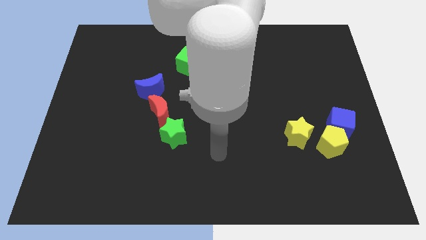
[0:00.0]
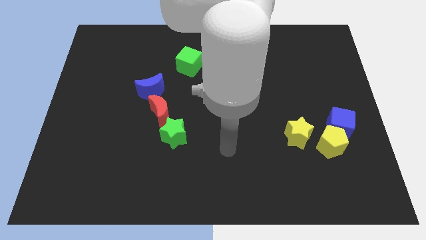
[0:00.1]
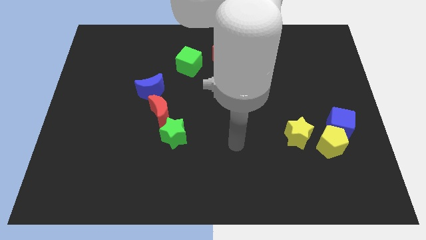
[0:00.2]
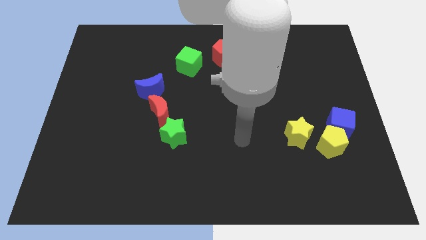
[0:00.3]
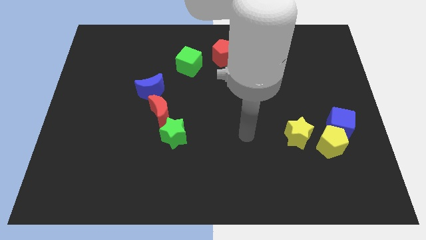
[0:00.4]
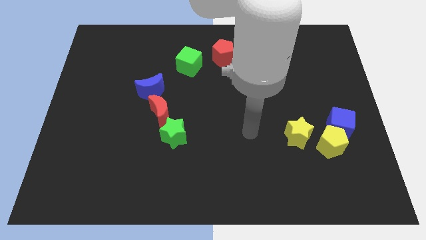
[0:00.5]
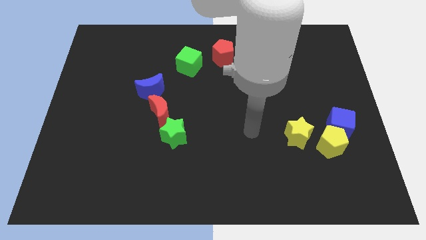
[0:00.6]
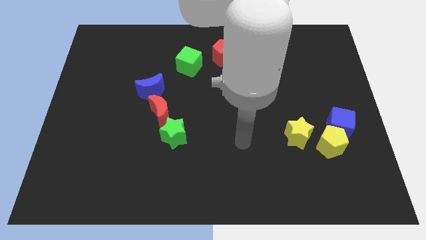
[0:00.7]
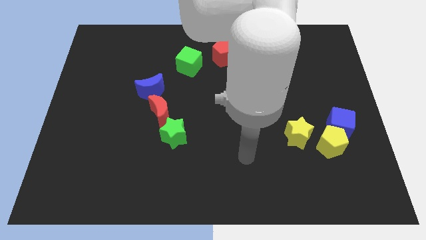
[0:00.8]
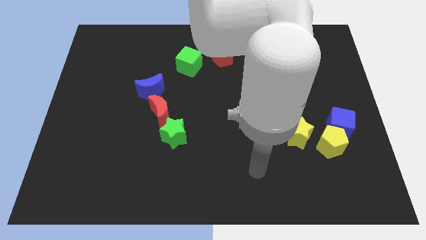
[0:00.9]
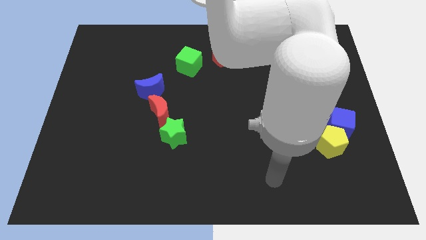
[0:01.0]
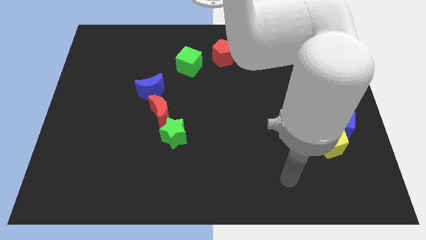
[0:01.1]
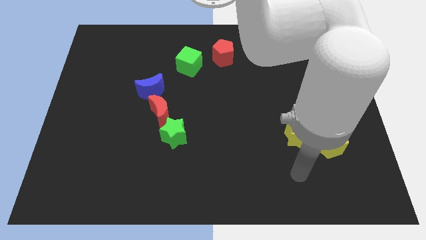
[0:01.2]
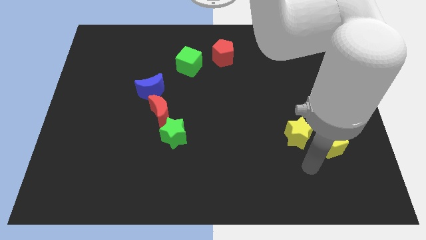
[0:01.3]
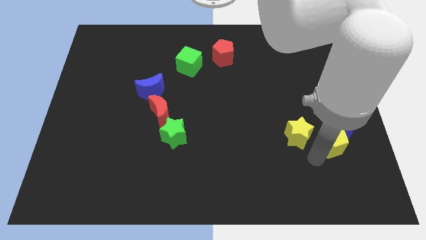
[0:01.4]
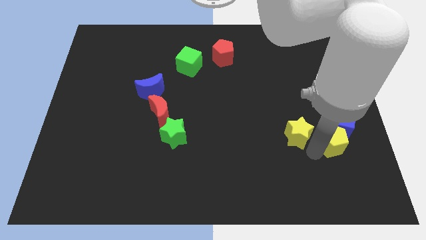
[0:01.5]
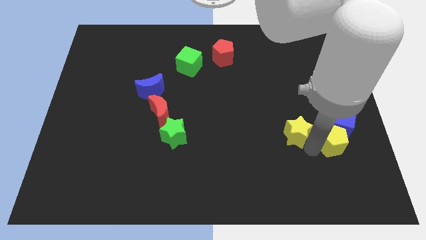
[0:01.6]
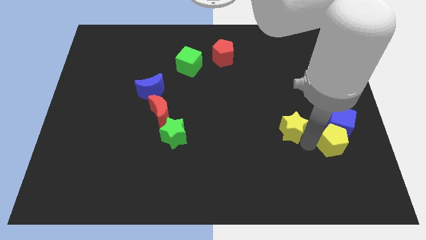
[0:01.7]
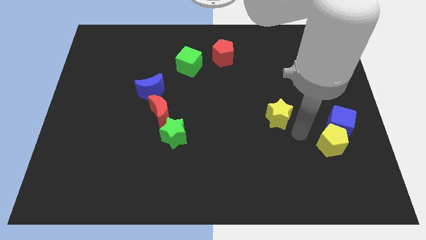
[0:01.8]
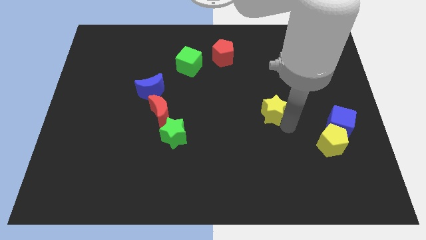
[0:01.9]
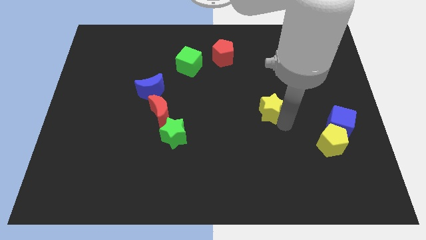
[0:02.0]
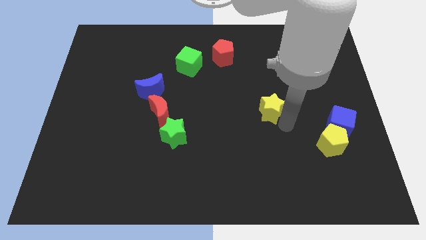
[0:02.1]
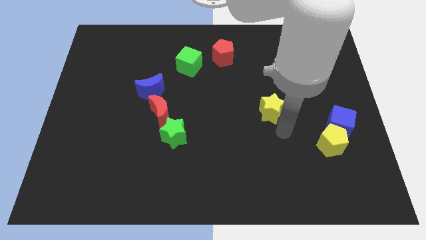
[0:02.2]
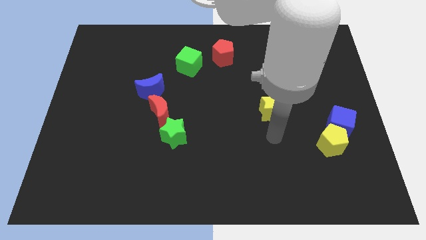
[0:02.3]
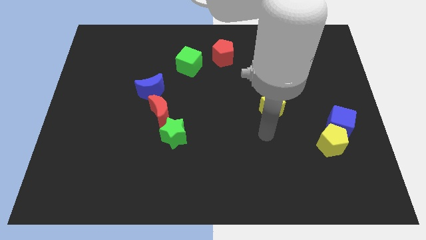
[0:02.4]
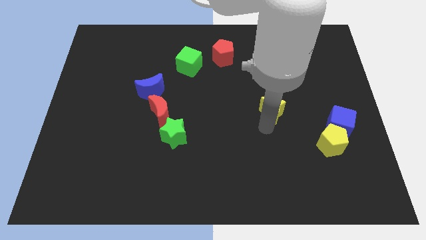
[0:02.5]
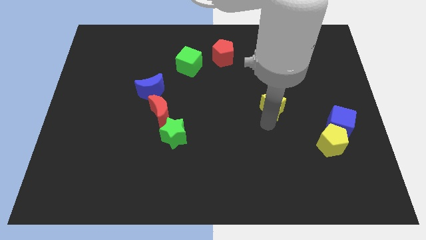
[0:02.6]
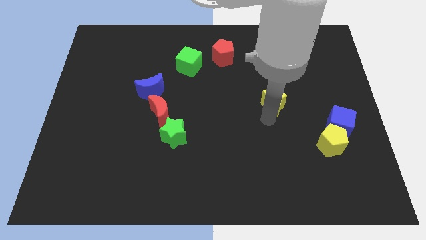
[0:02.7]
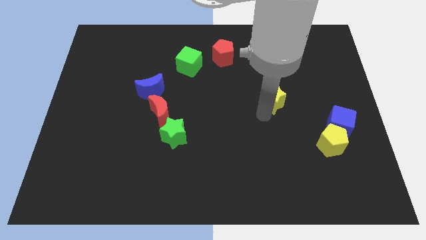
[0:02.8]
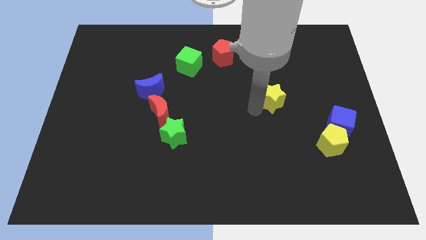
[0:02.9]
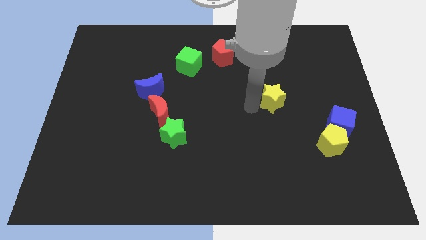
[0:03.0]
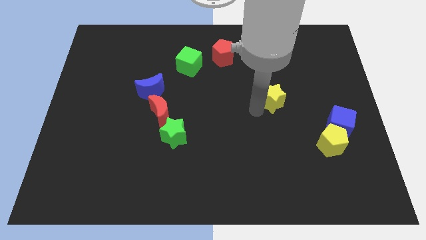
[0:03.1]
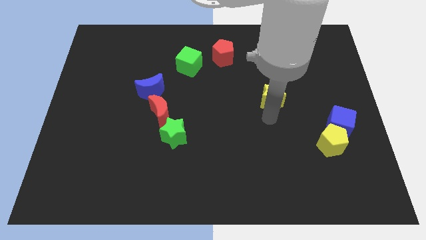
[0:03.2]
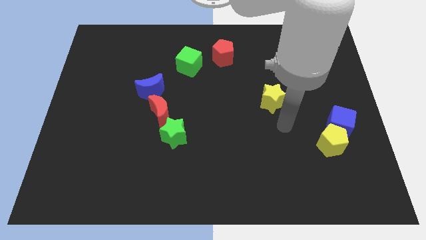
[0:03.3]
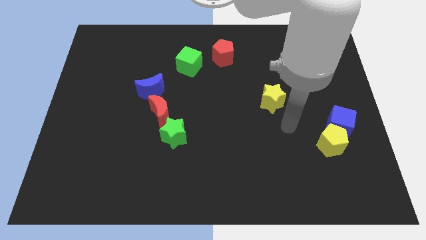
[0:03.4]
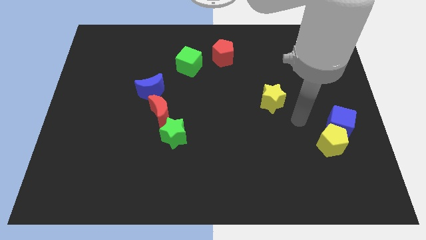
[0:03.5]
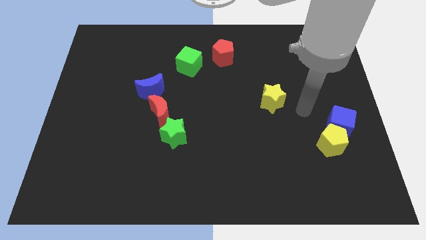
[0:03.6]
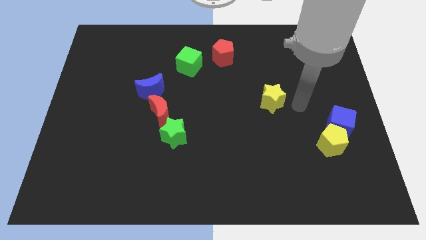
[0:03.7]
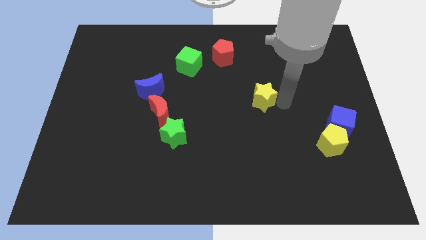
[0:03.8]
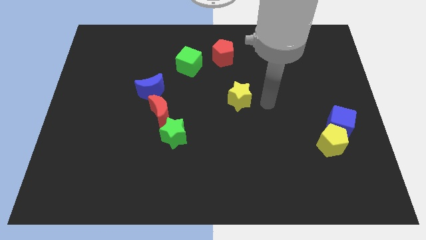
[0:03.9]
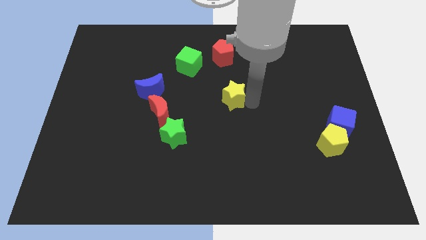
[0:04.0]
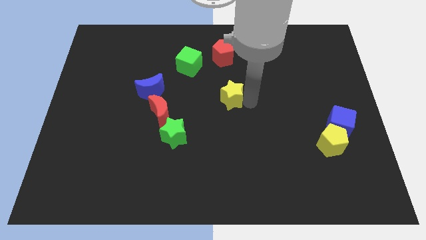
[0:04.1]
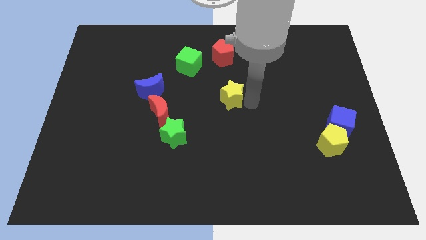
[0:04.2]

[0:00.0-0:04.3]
move the yellow star towards the center of the board

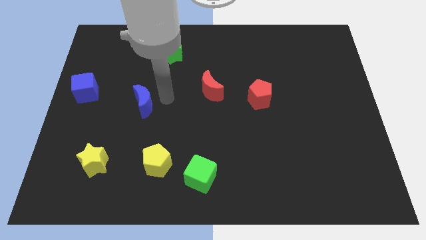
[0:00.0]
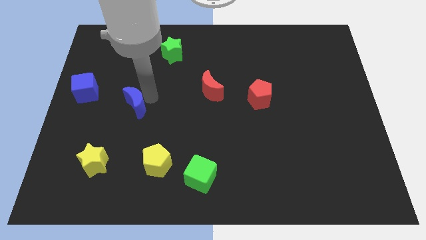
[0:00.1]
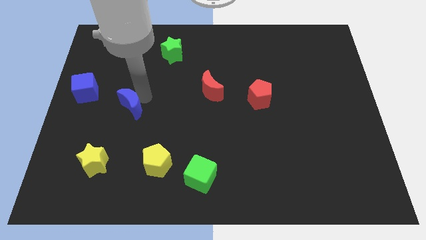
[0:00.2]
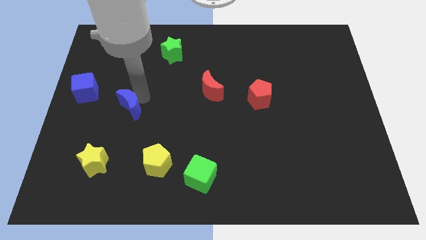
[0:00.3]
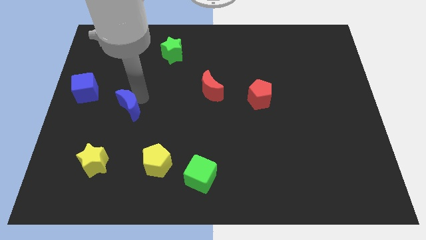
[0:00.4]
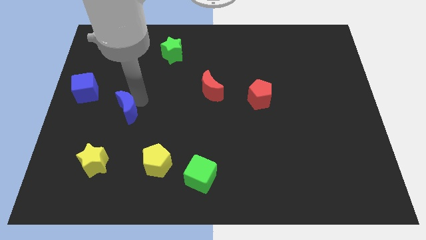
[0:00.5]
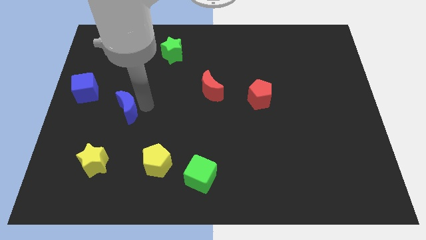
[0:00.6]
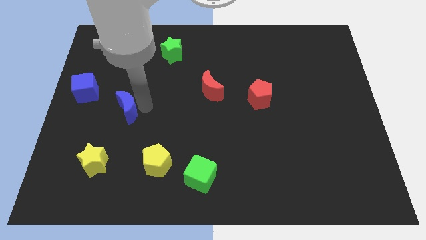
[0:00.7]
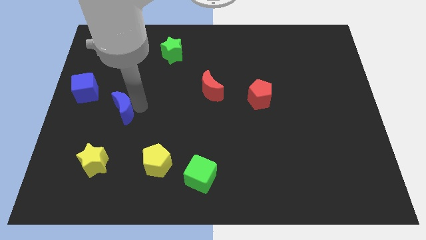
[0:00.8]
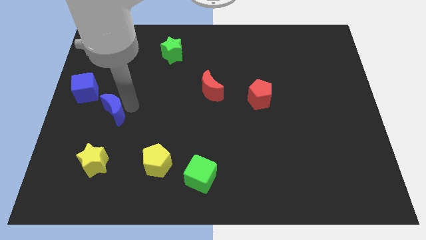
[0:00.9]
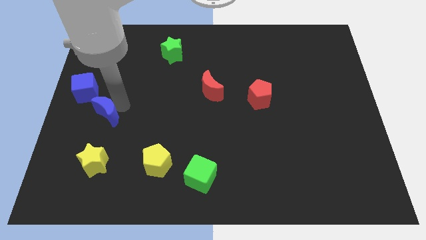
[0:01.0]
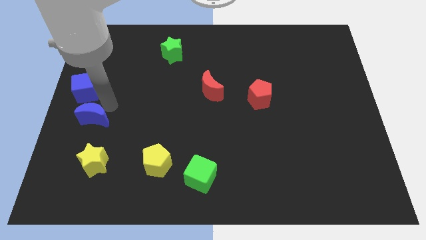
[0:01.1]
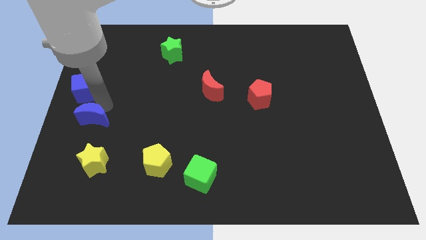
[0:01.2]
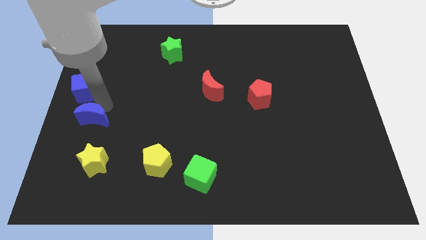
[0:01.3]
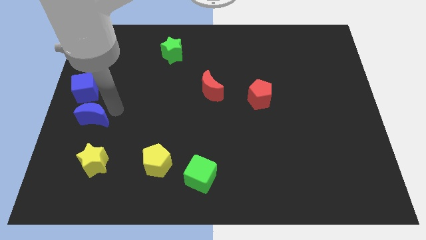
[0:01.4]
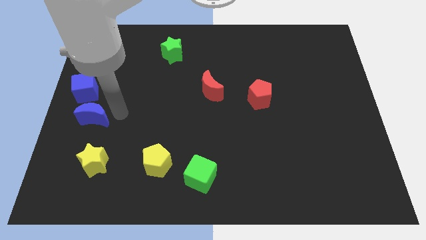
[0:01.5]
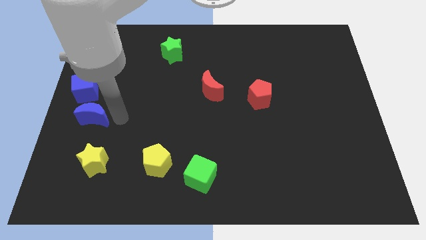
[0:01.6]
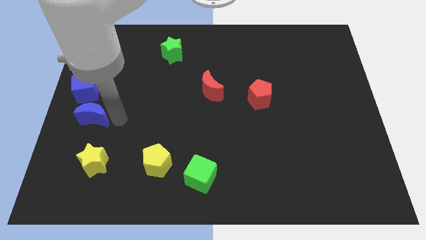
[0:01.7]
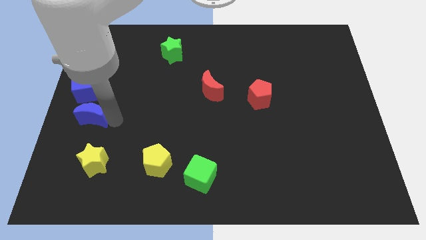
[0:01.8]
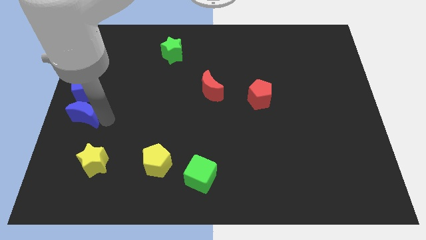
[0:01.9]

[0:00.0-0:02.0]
move the blue crescent to the bottom of the blue cube

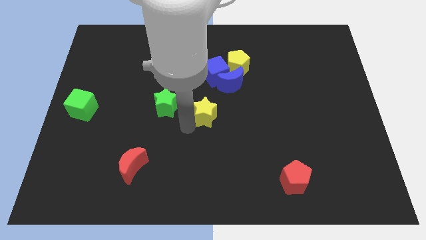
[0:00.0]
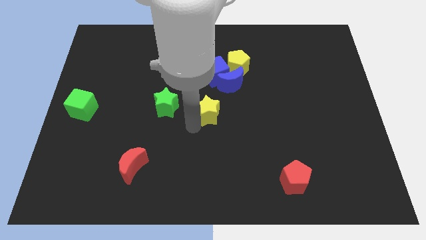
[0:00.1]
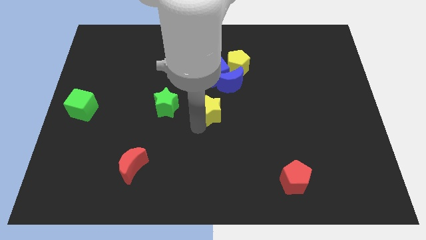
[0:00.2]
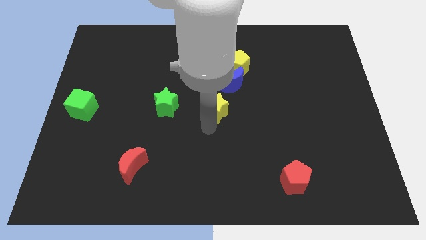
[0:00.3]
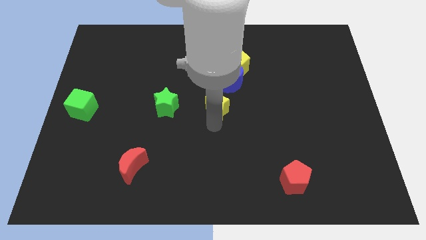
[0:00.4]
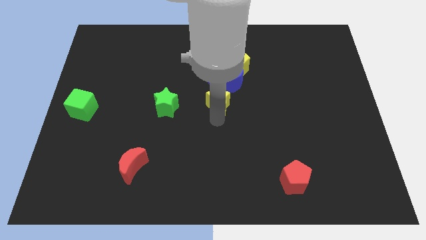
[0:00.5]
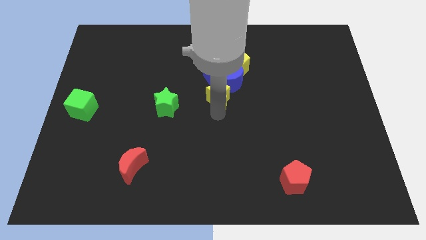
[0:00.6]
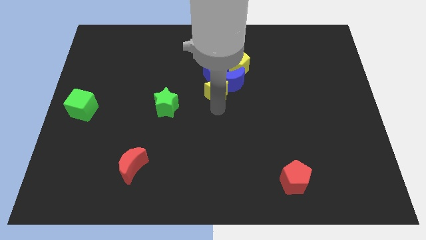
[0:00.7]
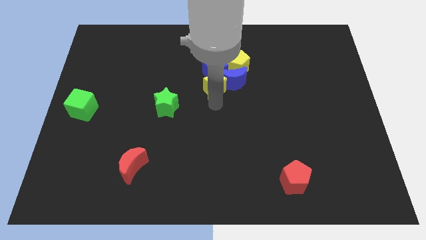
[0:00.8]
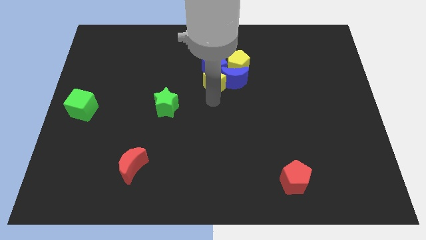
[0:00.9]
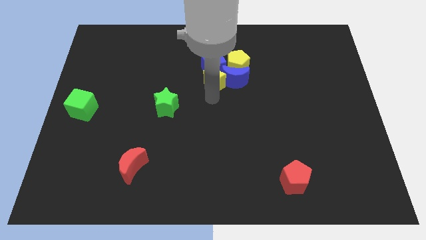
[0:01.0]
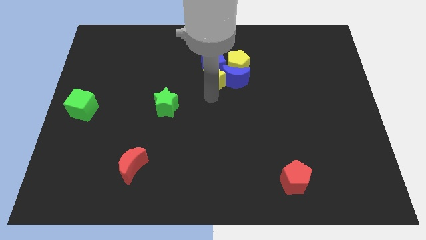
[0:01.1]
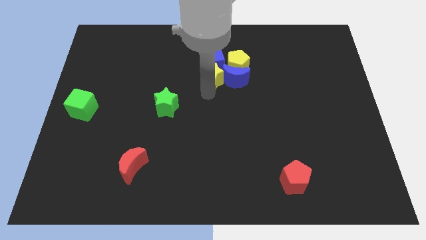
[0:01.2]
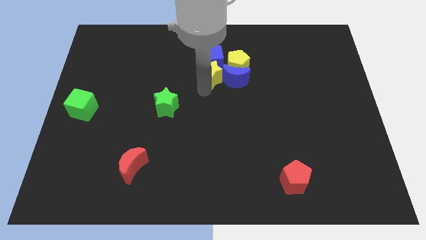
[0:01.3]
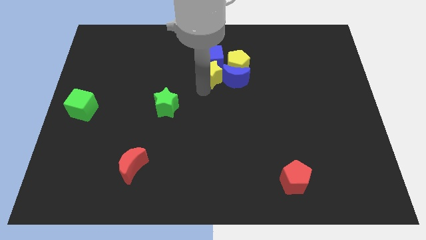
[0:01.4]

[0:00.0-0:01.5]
move the yellow star into the bottom of the blue cube

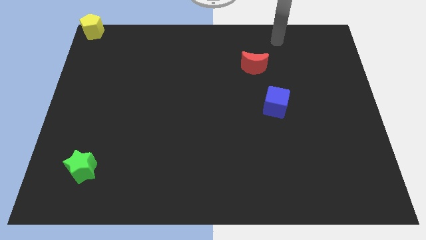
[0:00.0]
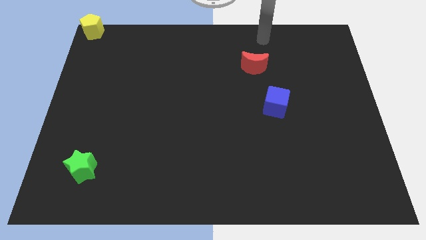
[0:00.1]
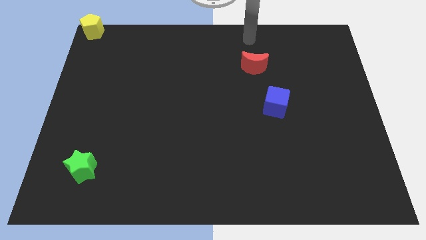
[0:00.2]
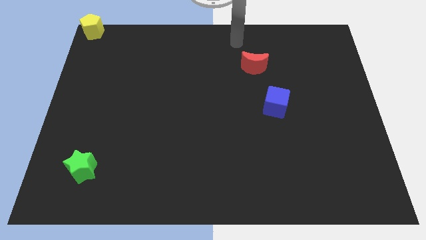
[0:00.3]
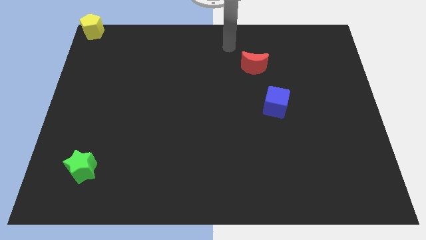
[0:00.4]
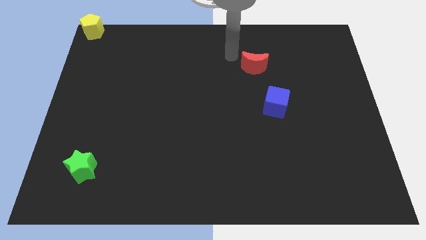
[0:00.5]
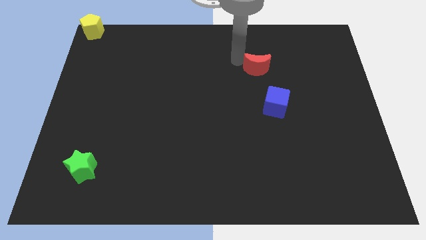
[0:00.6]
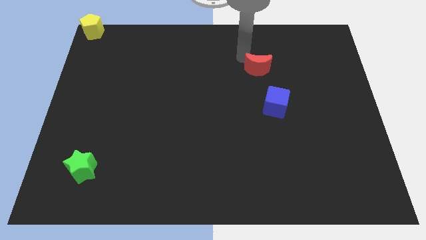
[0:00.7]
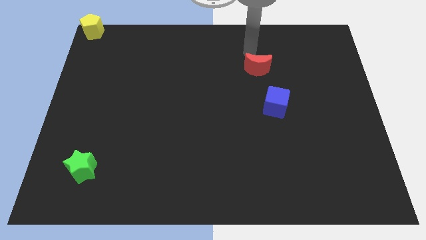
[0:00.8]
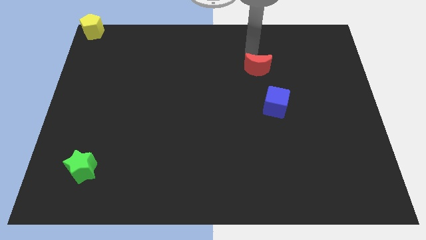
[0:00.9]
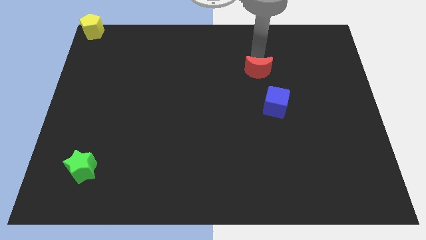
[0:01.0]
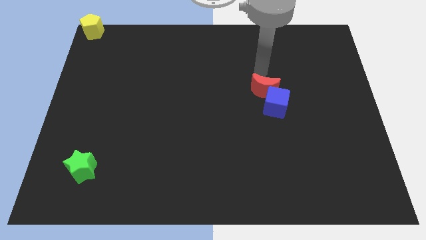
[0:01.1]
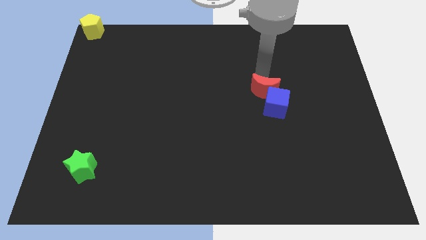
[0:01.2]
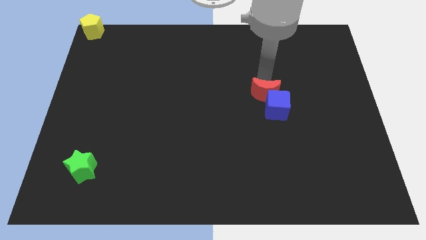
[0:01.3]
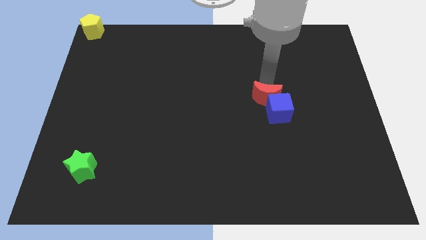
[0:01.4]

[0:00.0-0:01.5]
move the red crescent into the top side of the blue cube
